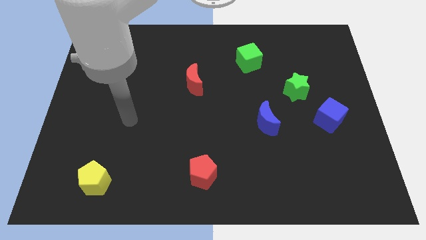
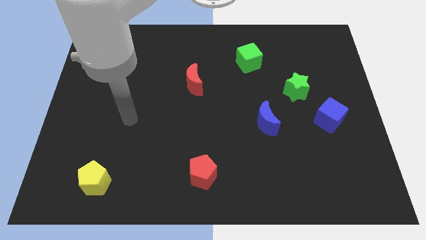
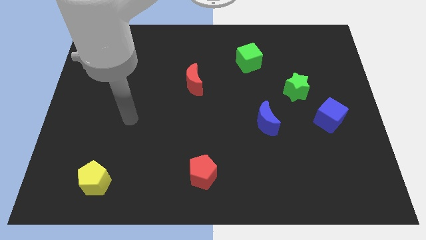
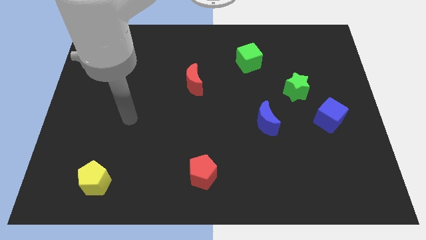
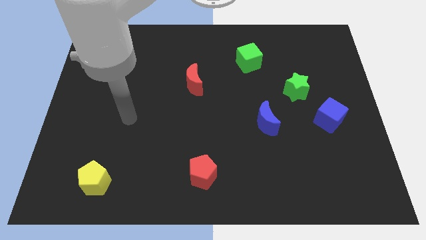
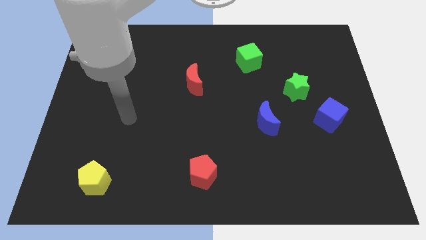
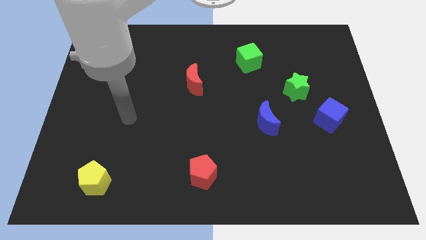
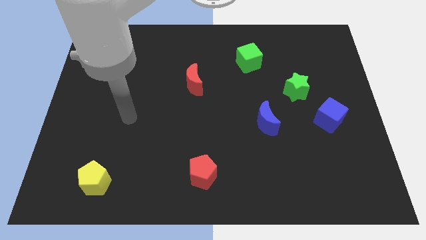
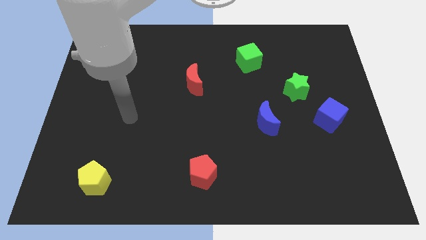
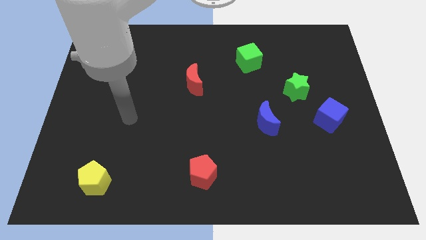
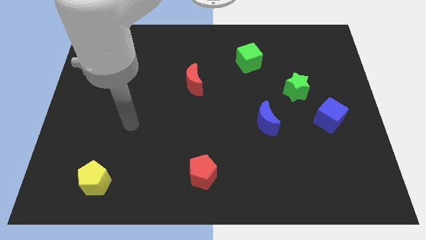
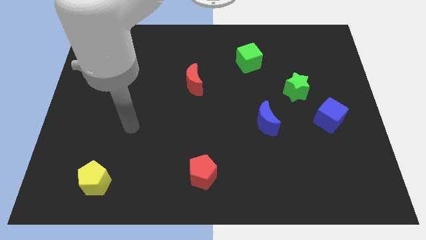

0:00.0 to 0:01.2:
move the arm downwards of the board

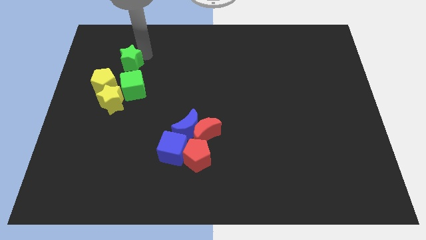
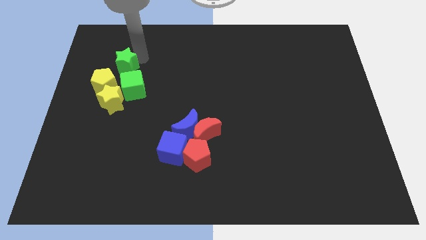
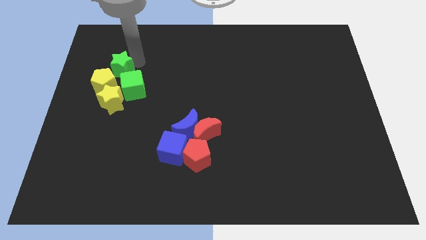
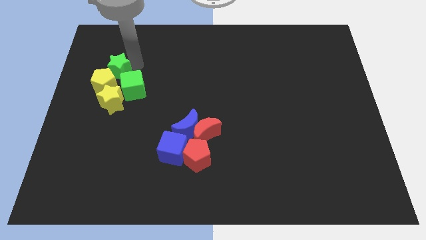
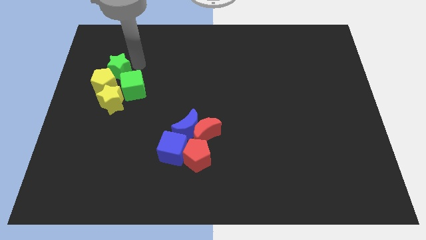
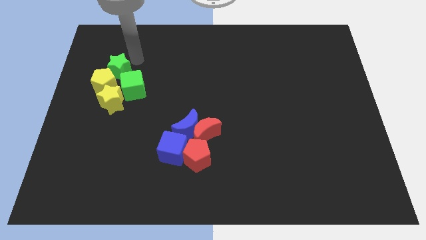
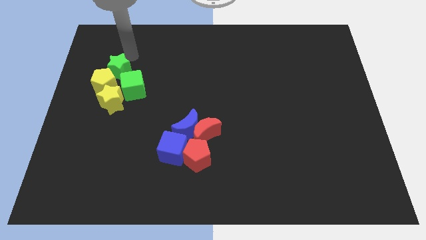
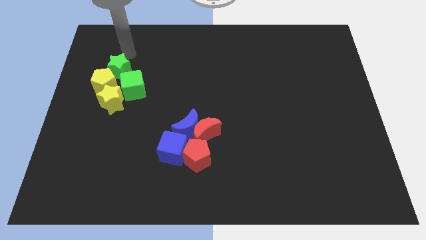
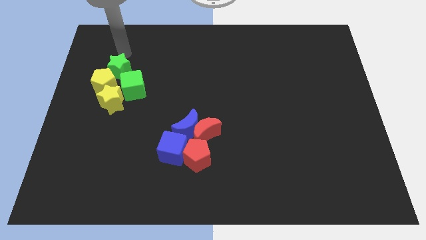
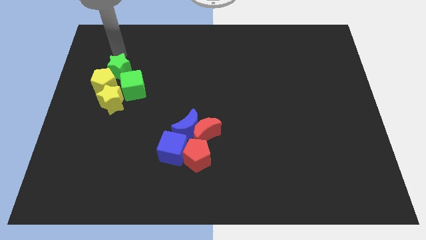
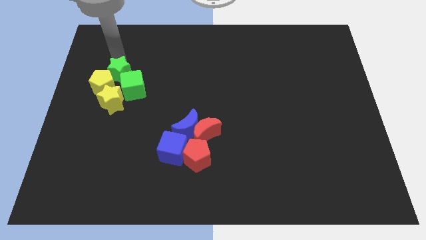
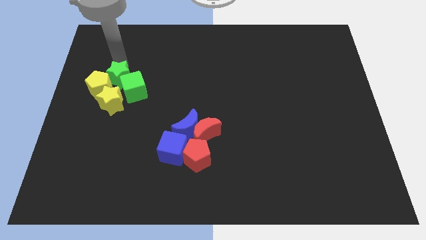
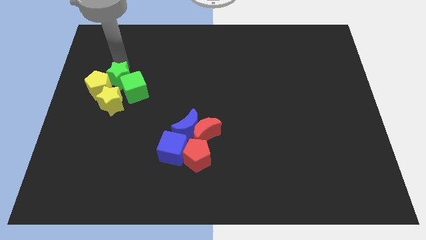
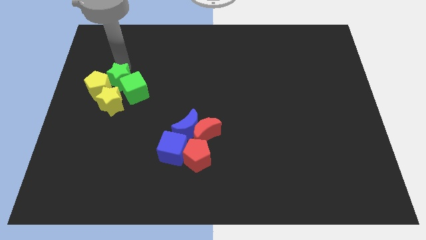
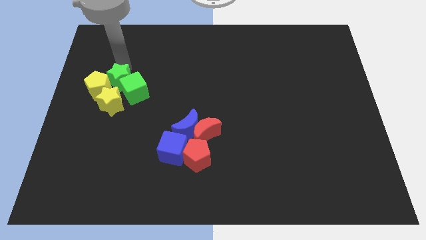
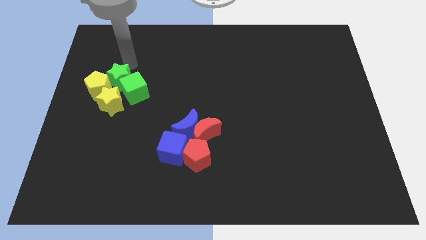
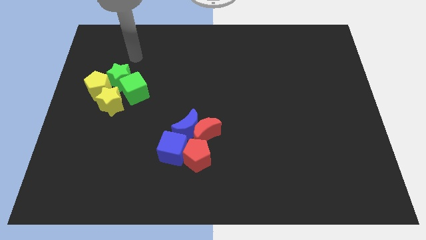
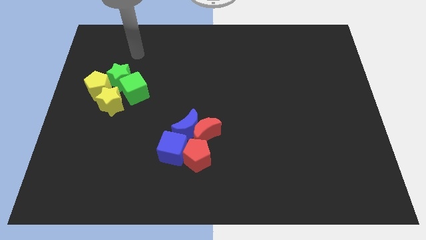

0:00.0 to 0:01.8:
make a group of green and yellow blocks

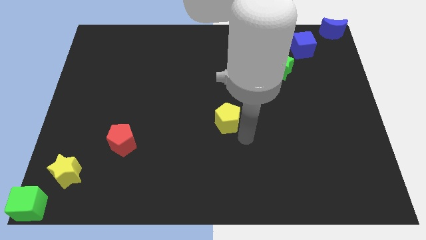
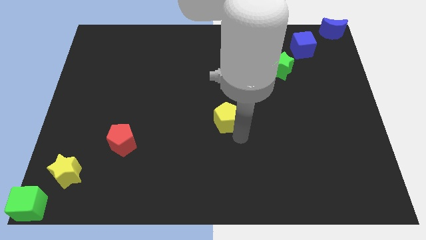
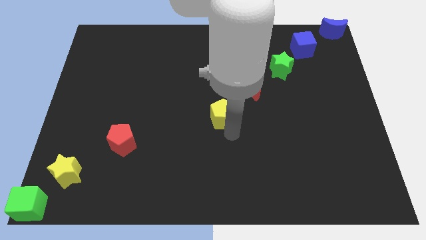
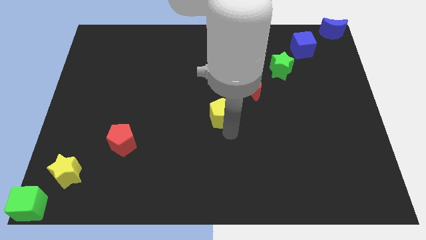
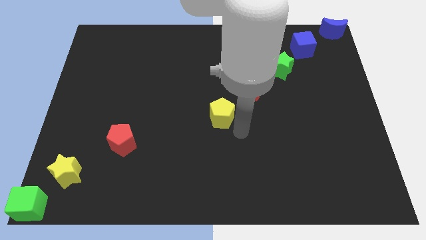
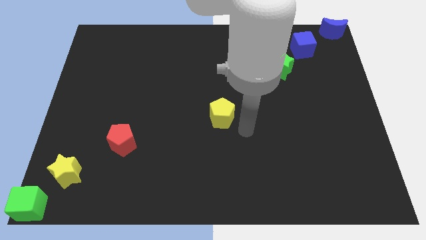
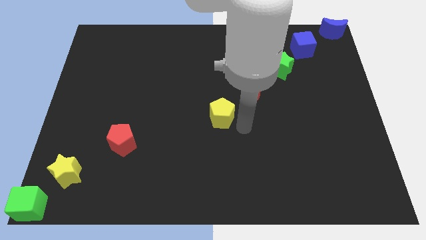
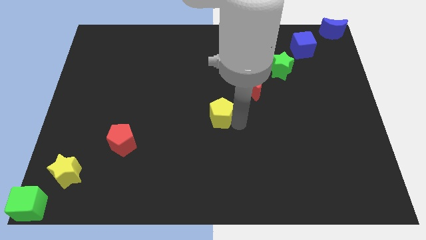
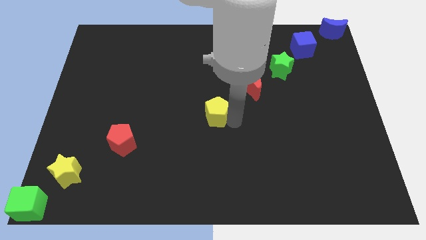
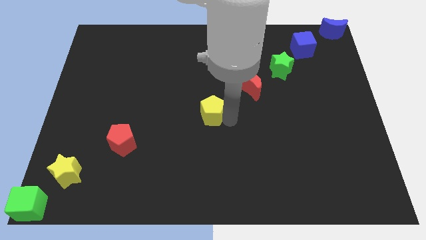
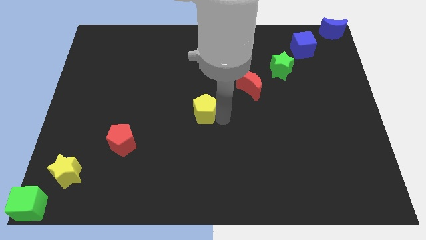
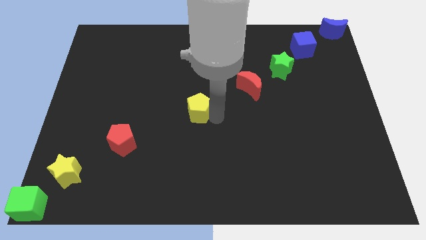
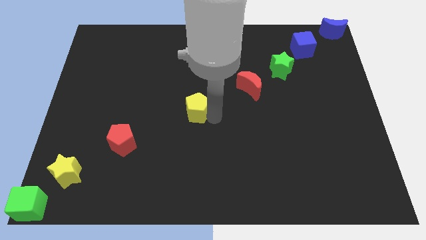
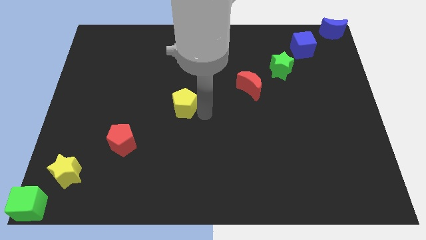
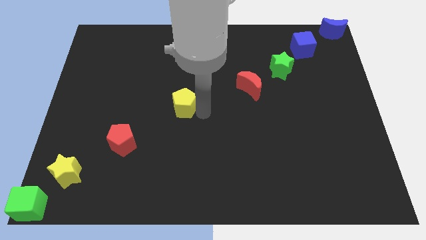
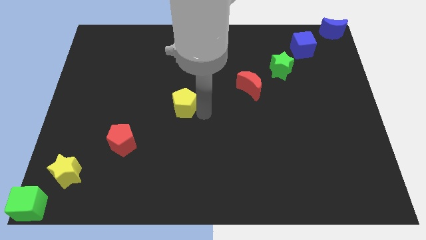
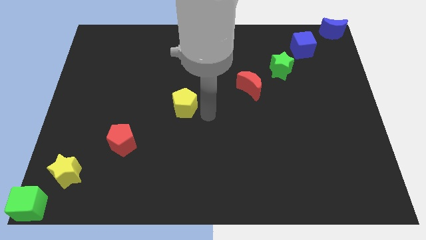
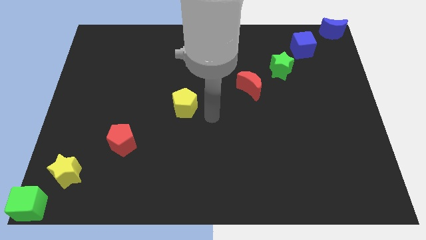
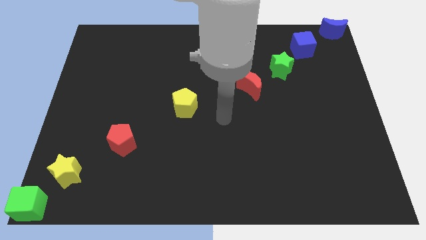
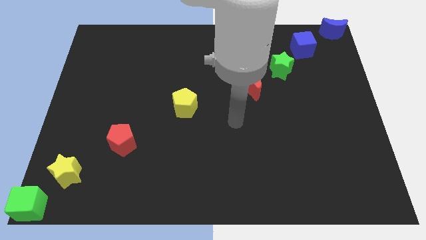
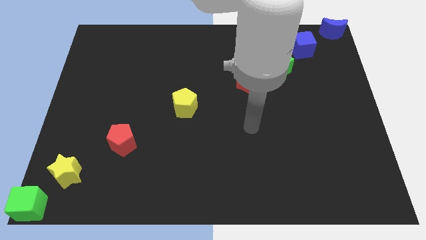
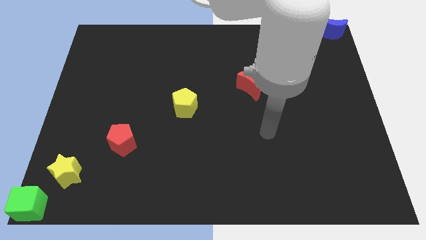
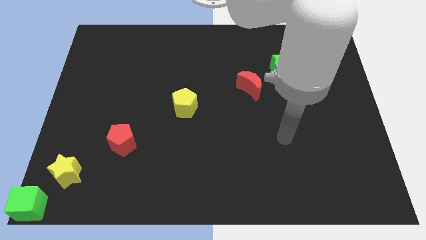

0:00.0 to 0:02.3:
place the yellow pentagon in between the red moon and red pentagon

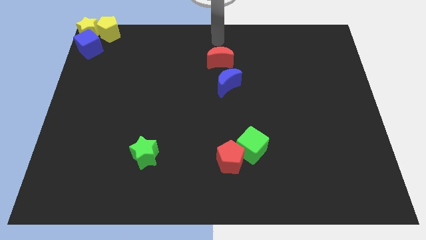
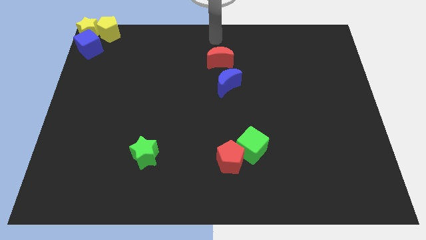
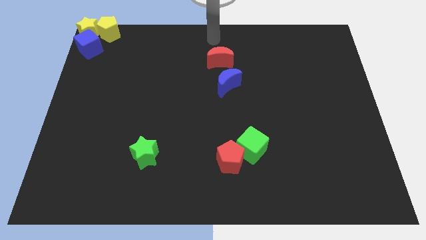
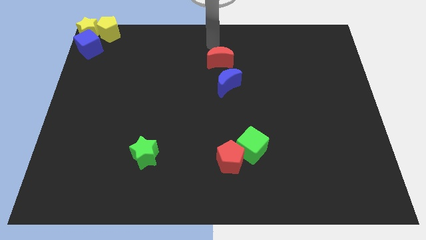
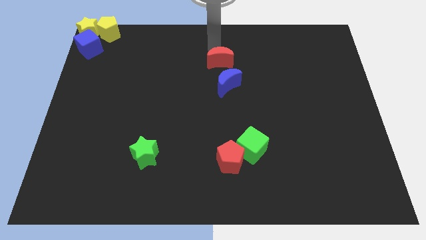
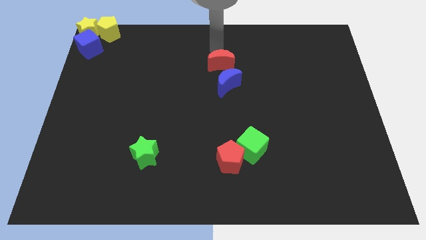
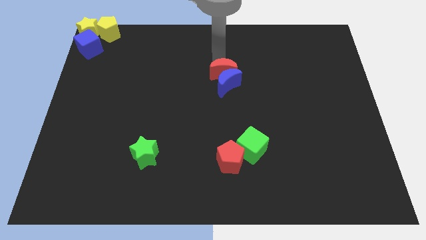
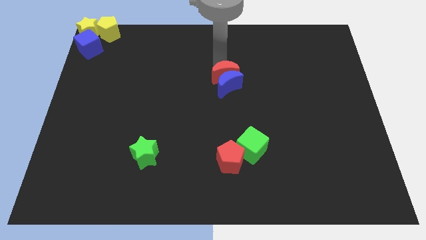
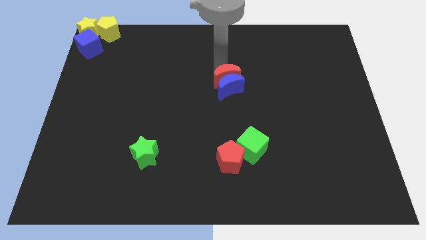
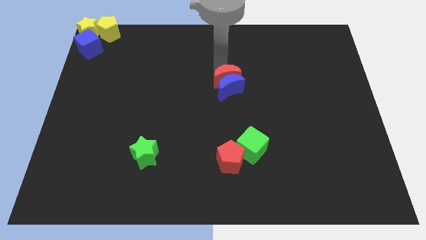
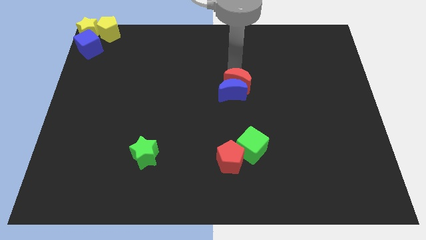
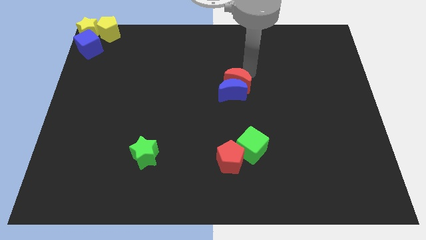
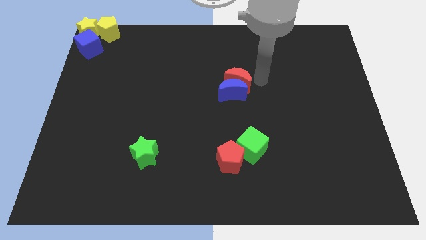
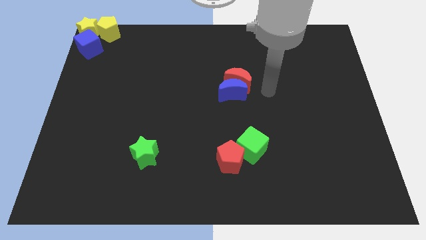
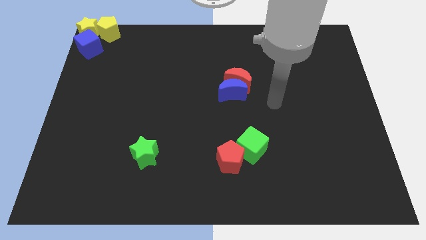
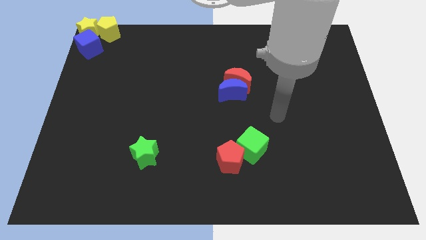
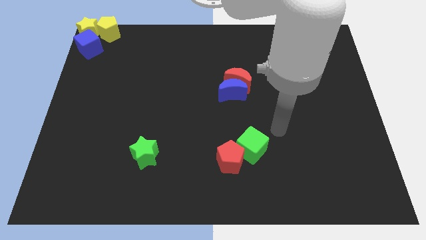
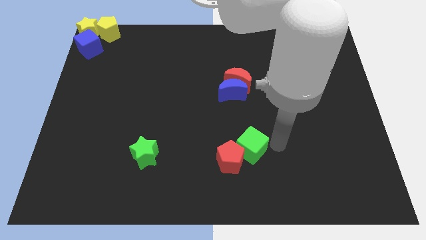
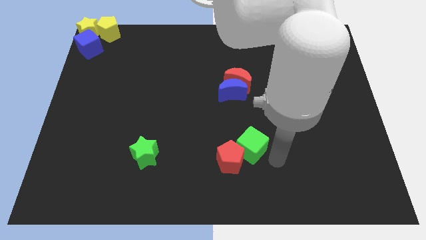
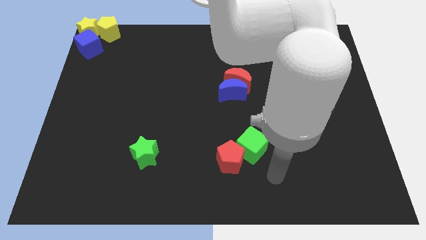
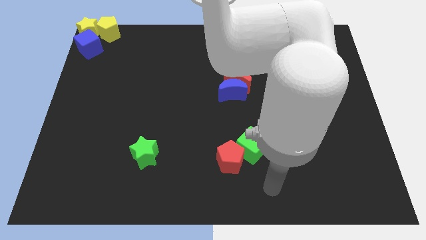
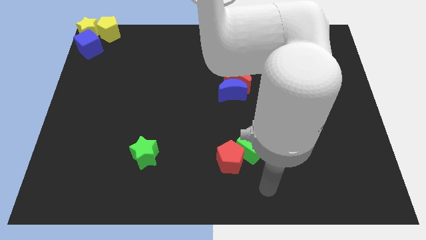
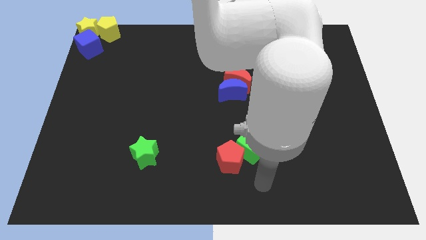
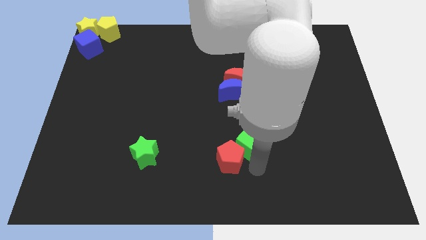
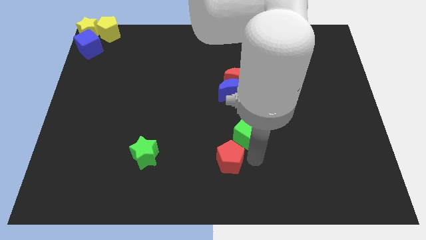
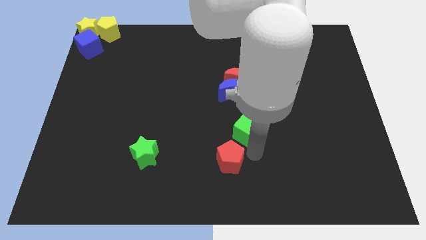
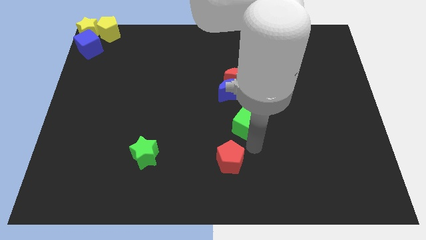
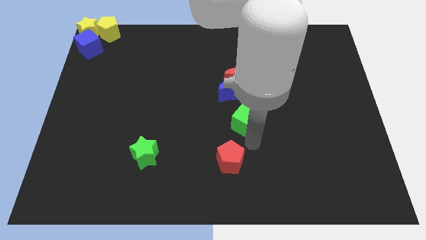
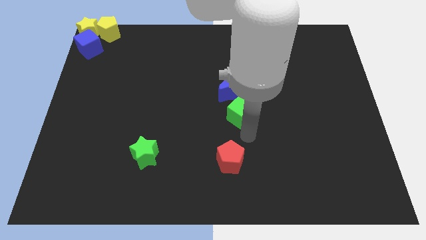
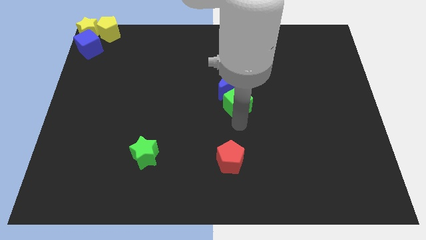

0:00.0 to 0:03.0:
separate the green cube and red pentagon

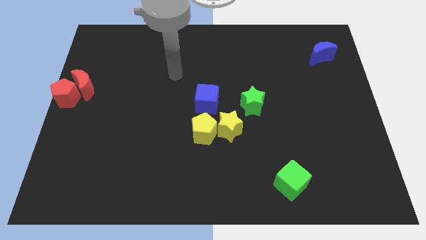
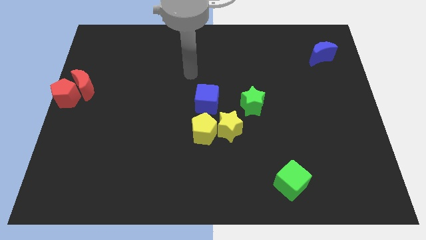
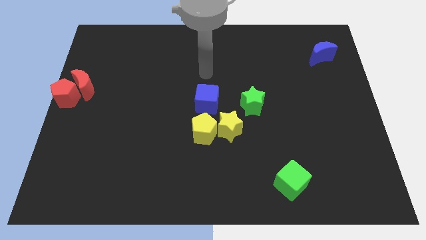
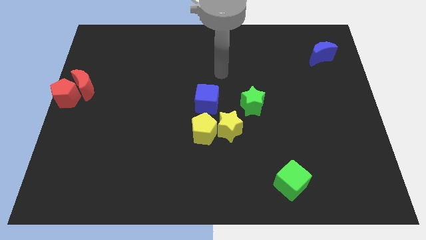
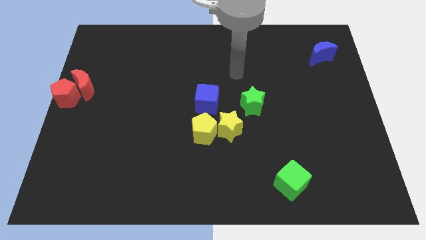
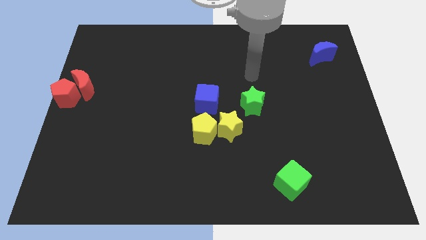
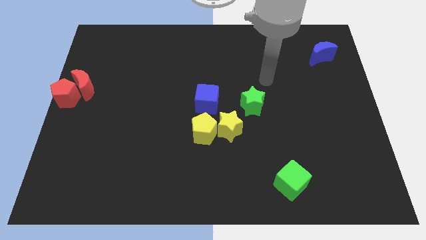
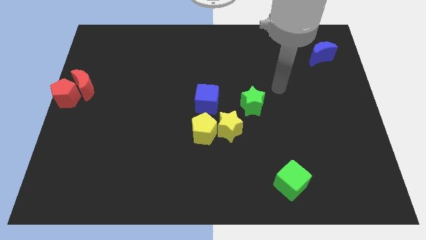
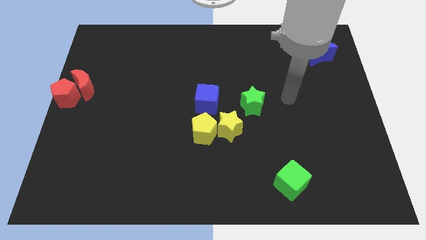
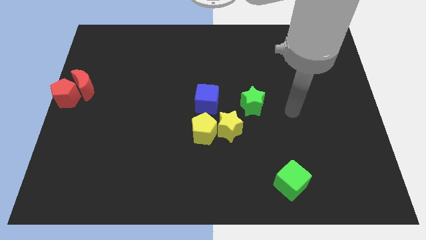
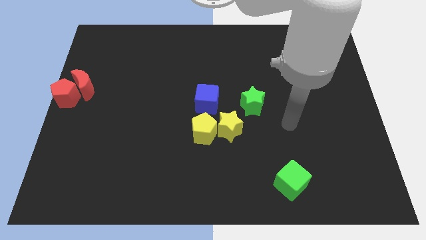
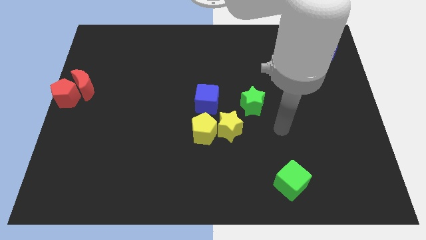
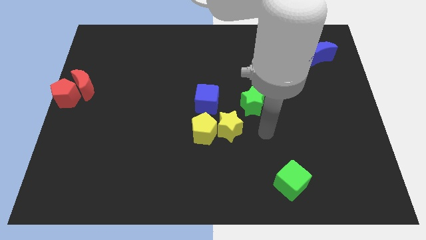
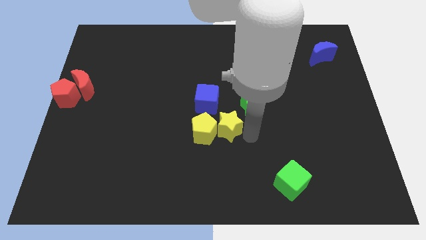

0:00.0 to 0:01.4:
move your arm towards the bottom of green star
